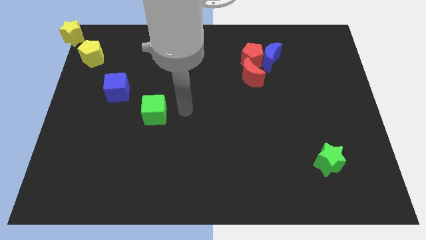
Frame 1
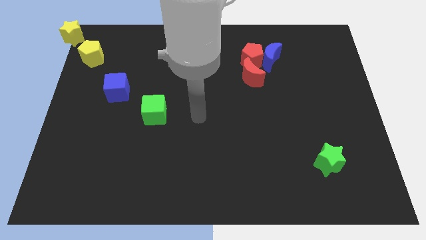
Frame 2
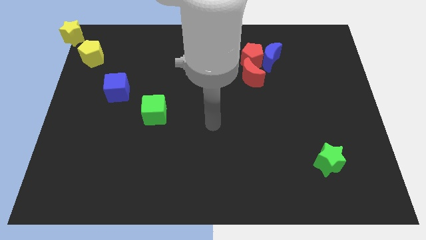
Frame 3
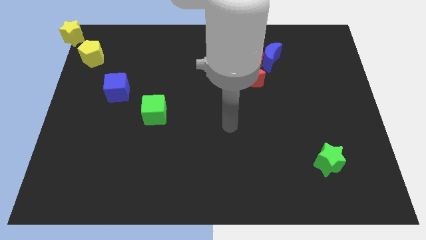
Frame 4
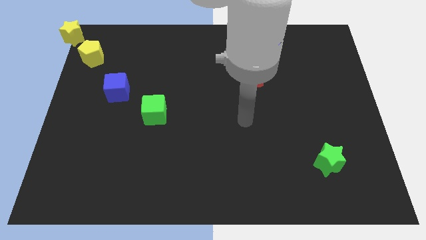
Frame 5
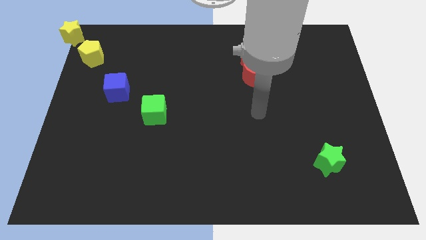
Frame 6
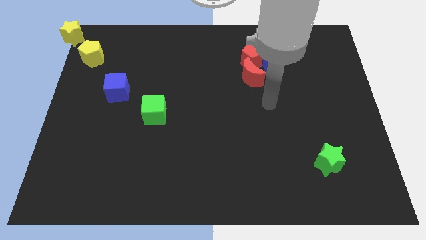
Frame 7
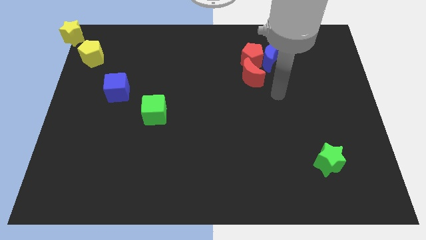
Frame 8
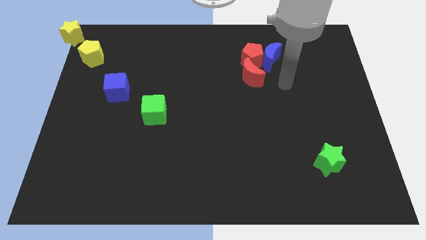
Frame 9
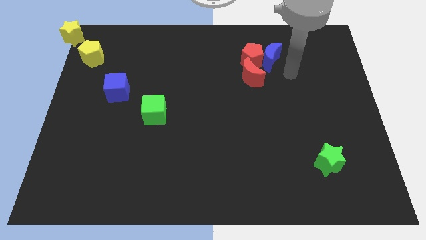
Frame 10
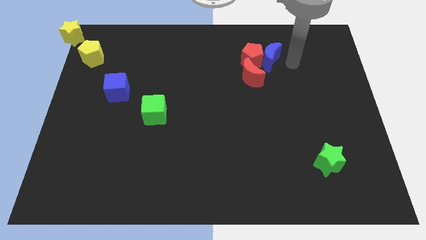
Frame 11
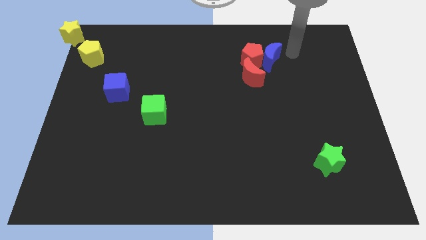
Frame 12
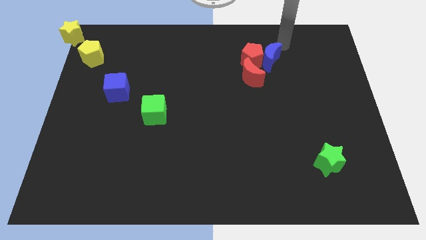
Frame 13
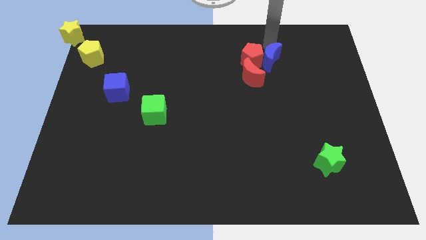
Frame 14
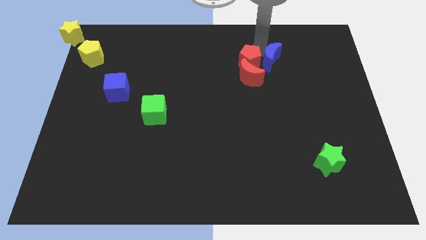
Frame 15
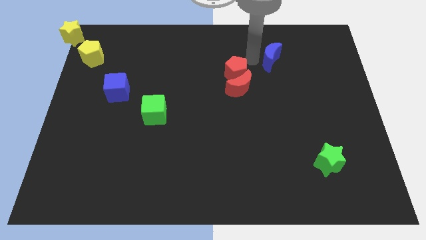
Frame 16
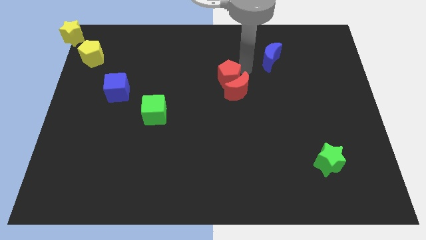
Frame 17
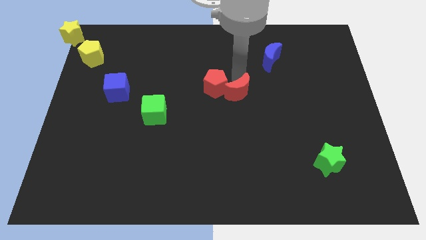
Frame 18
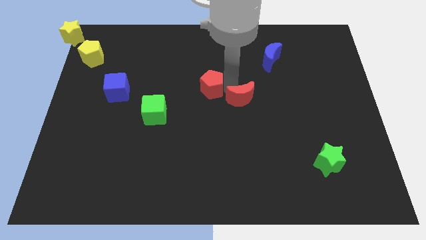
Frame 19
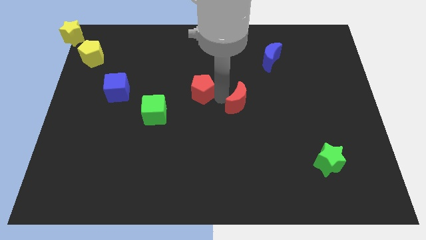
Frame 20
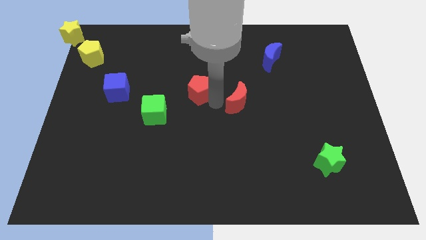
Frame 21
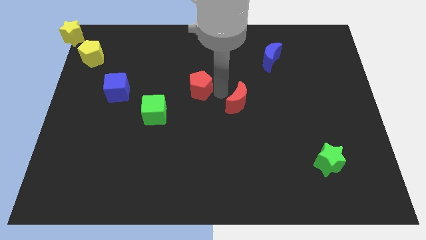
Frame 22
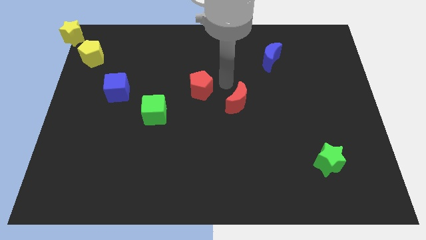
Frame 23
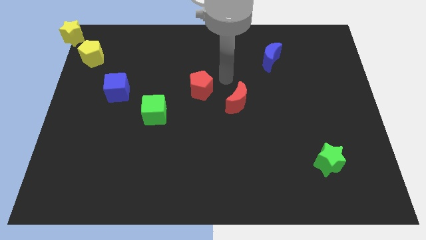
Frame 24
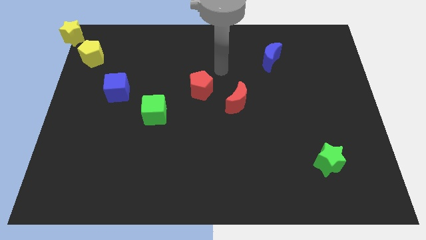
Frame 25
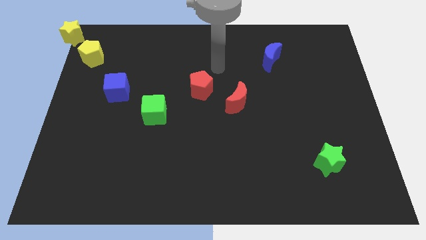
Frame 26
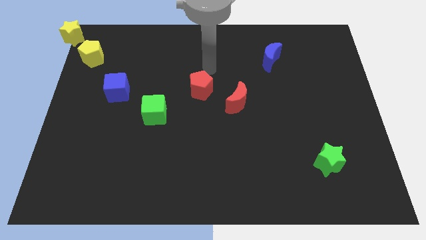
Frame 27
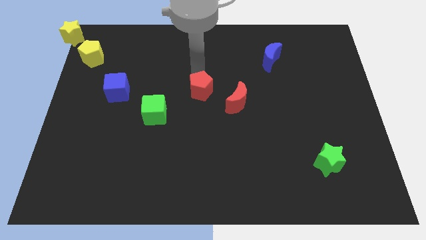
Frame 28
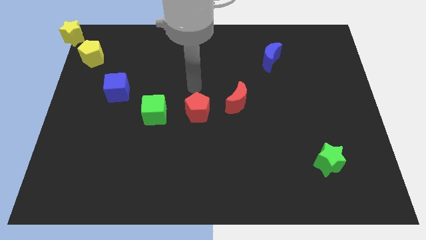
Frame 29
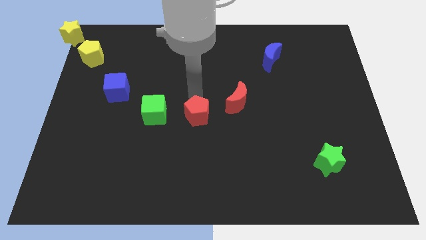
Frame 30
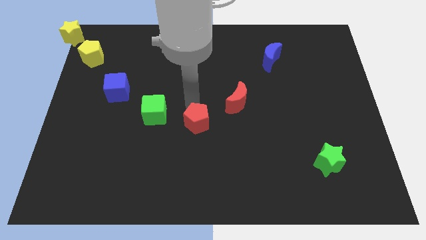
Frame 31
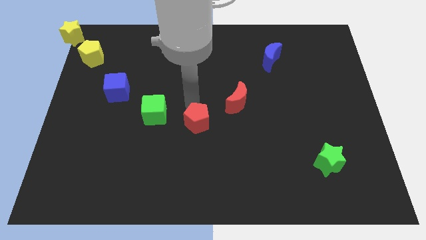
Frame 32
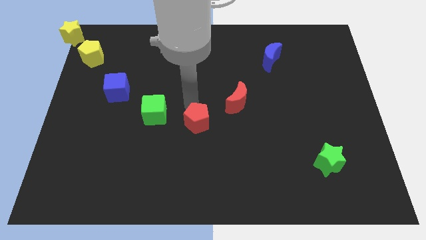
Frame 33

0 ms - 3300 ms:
move the red pentagon away from the blue crescent

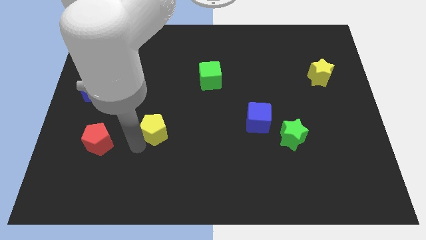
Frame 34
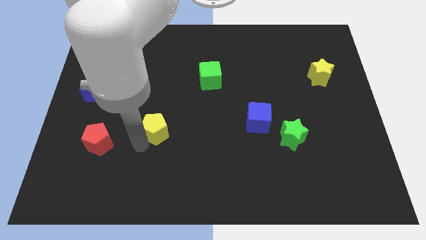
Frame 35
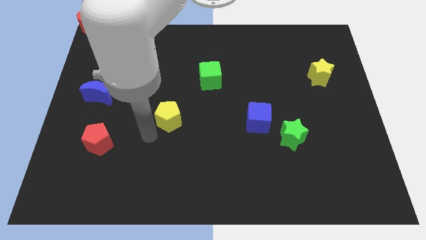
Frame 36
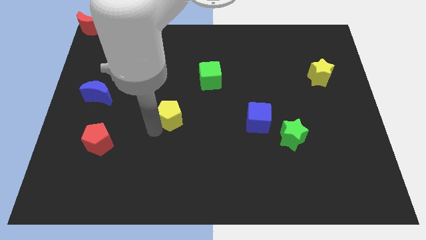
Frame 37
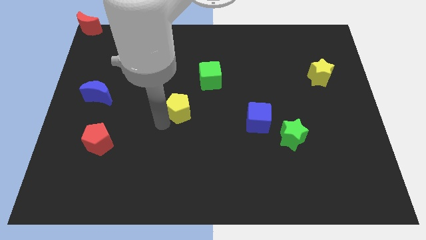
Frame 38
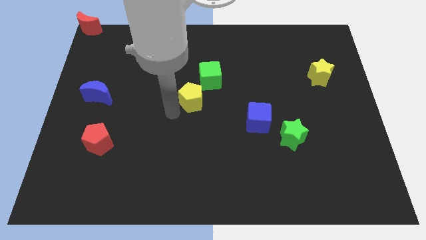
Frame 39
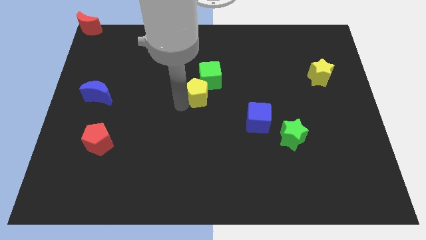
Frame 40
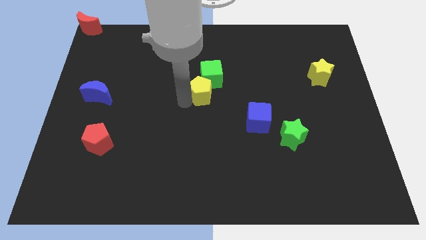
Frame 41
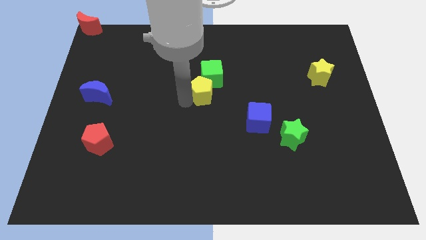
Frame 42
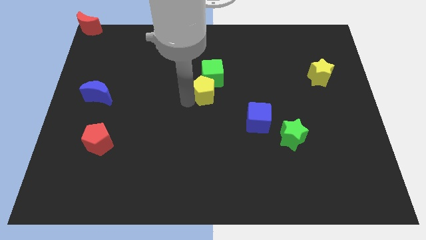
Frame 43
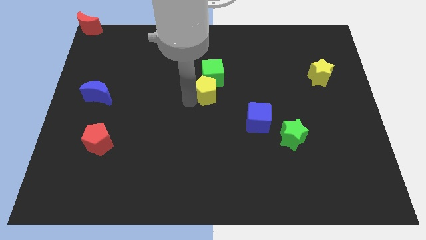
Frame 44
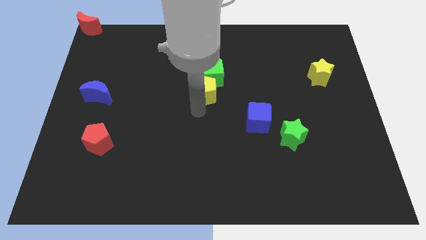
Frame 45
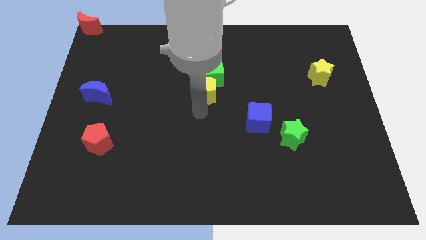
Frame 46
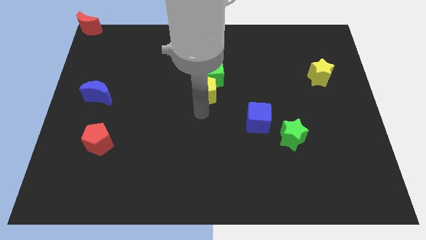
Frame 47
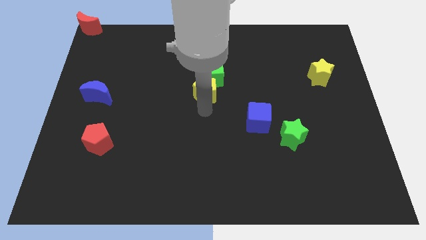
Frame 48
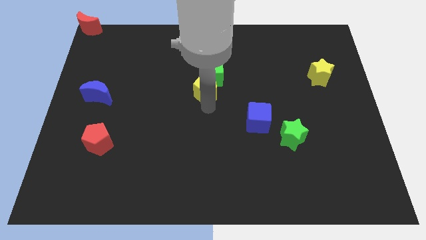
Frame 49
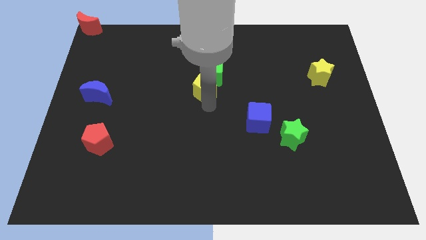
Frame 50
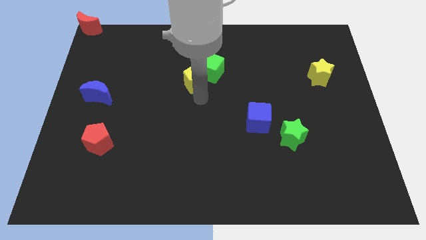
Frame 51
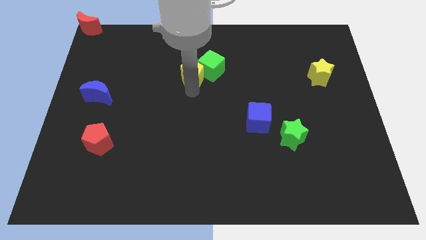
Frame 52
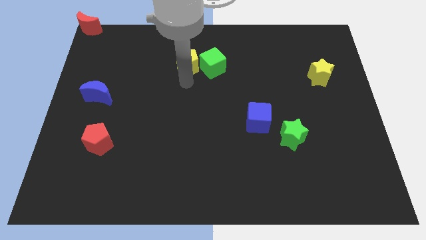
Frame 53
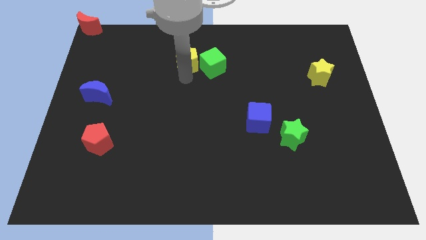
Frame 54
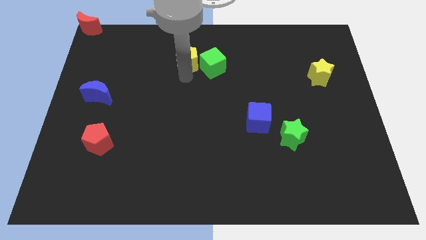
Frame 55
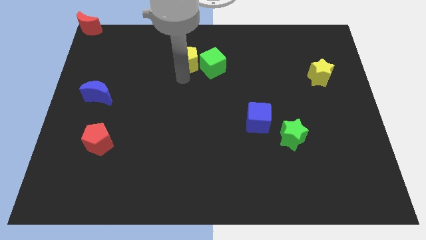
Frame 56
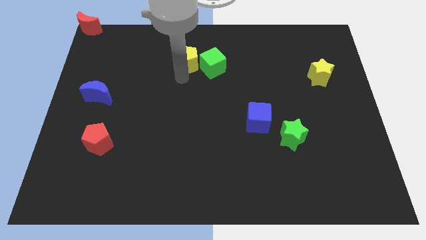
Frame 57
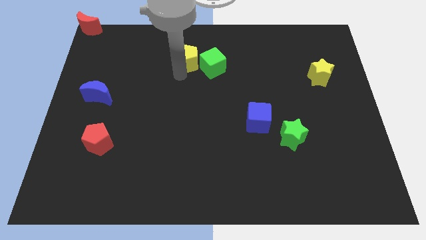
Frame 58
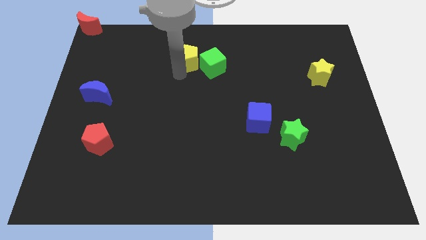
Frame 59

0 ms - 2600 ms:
move the yellow pentagon to the left of the green cube

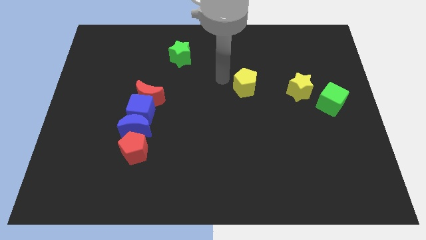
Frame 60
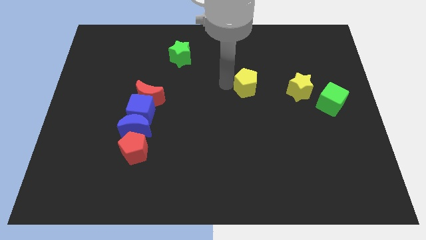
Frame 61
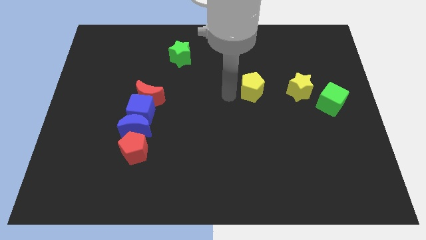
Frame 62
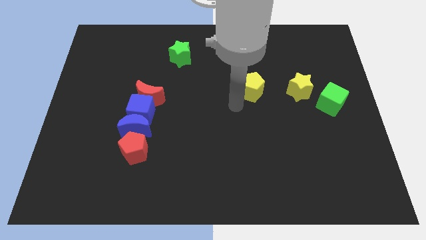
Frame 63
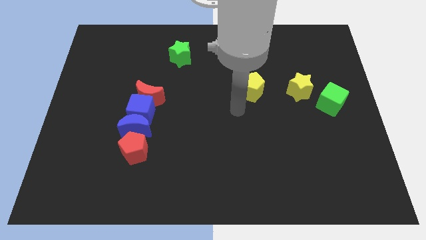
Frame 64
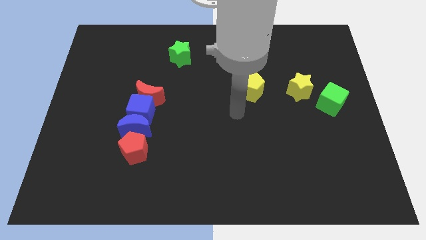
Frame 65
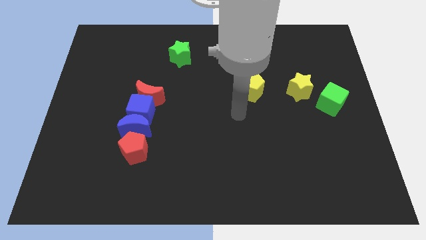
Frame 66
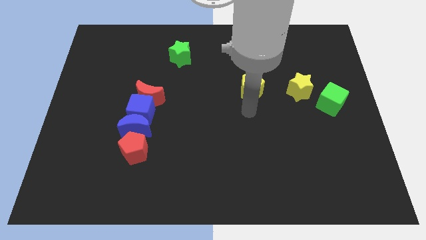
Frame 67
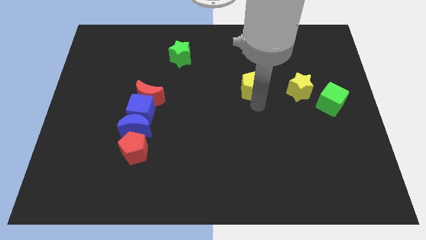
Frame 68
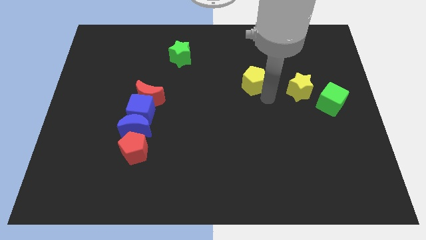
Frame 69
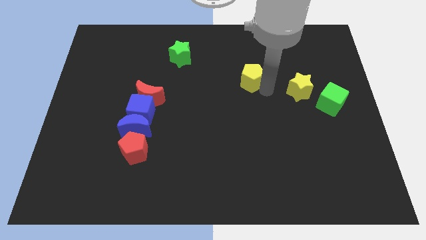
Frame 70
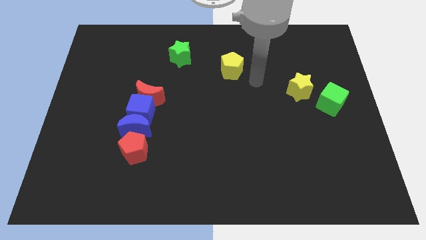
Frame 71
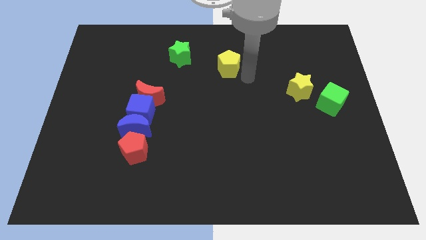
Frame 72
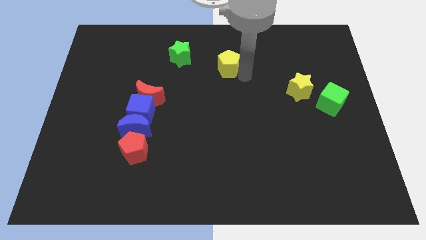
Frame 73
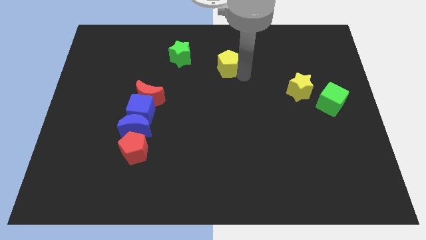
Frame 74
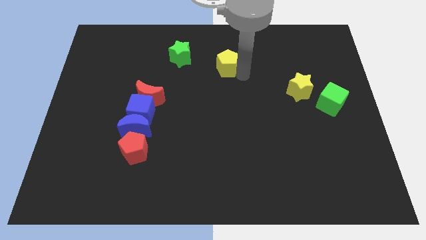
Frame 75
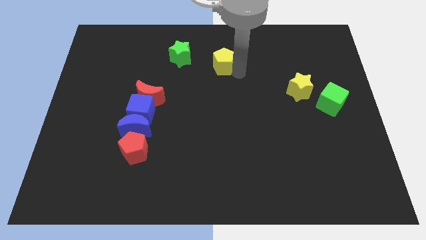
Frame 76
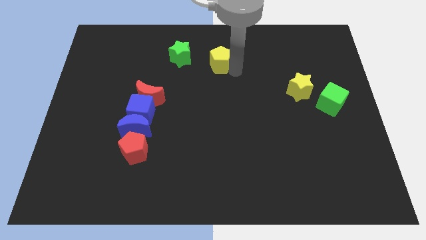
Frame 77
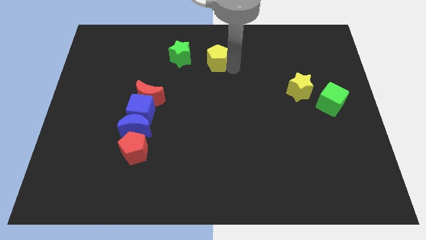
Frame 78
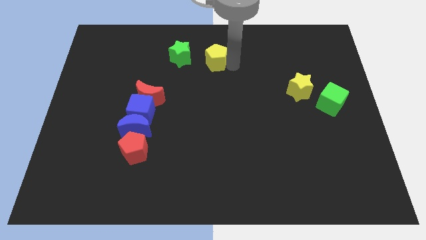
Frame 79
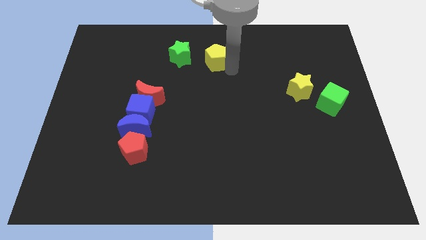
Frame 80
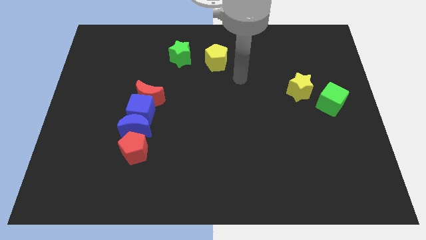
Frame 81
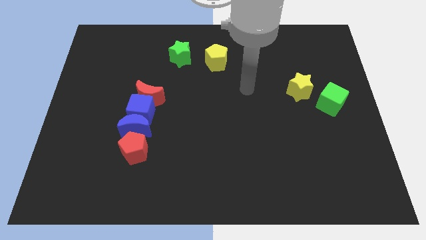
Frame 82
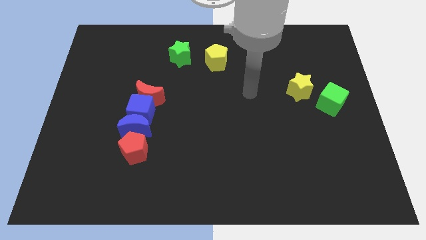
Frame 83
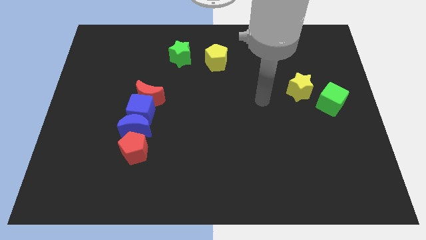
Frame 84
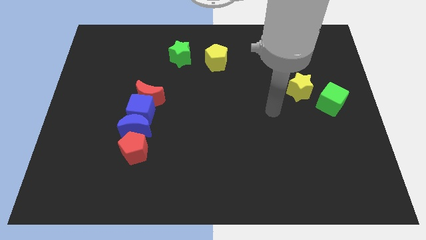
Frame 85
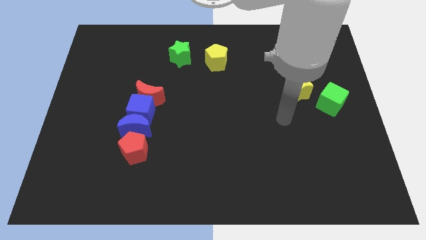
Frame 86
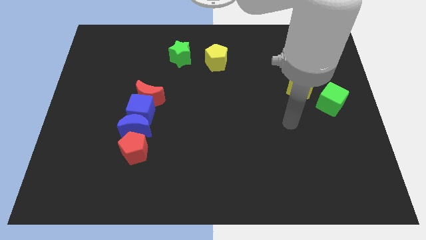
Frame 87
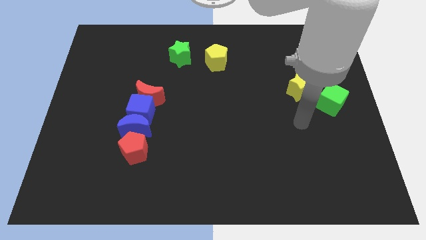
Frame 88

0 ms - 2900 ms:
place the yellow pentagon right to the green star

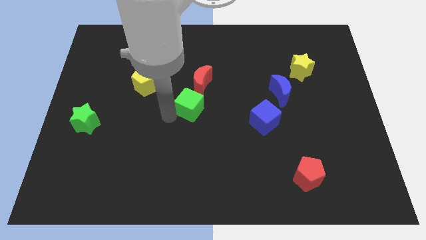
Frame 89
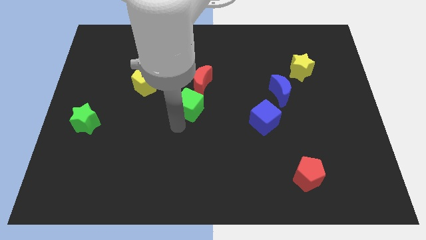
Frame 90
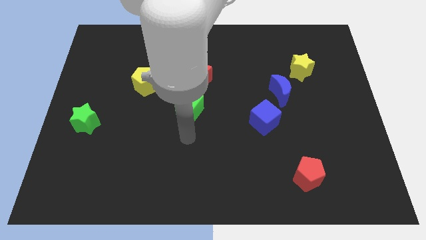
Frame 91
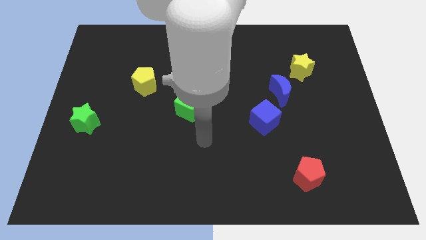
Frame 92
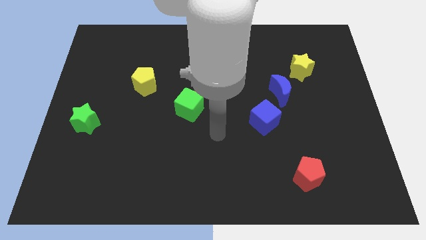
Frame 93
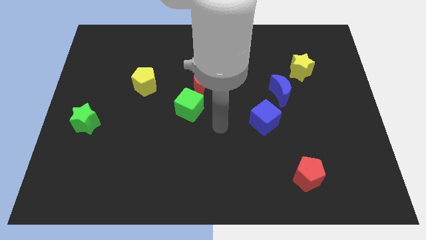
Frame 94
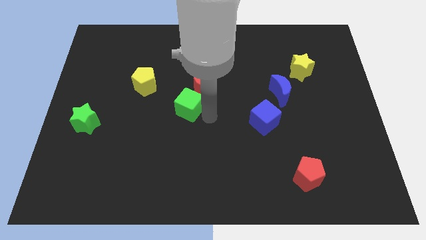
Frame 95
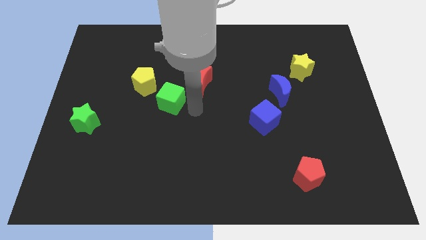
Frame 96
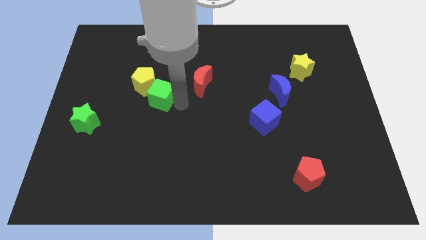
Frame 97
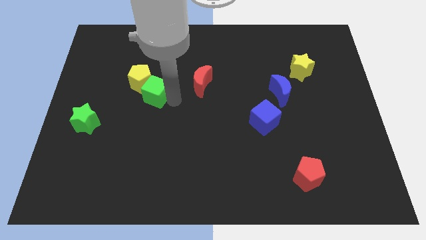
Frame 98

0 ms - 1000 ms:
seperate red moon and green cube
